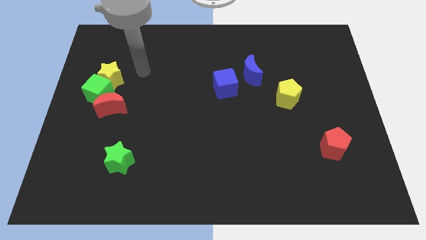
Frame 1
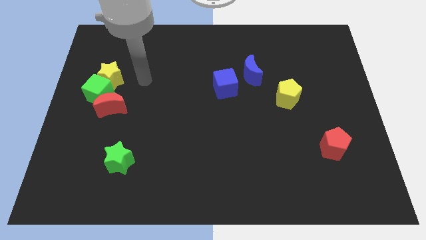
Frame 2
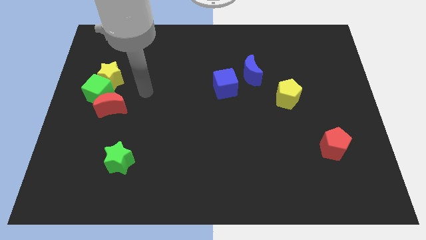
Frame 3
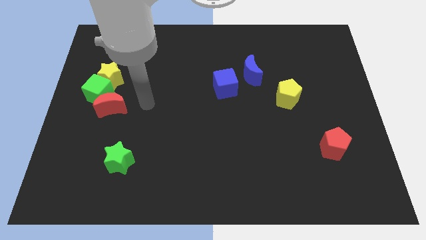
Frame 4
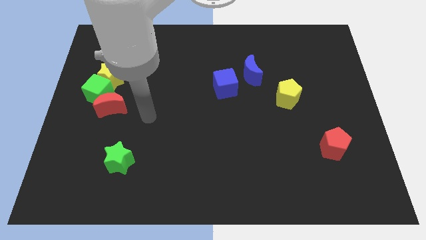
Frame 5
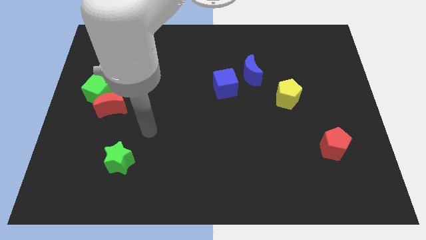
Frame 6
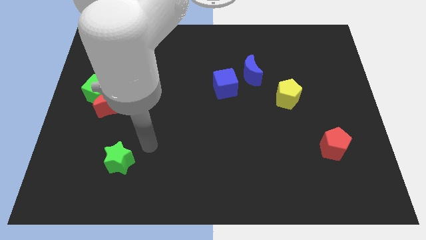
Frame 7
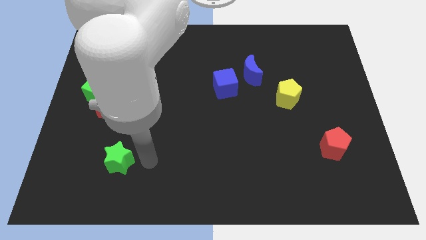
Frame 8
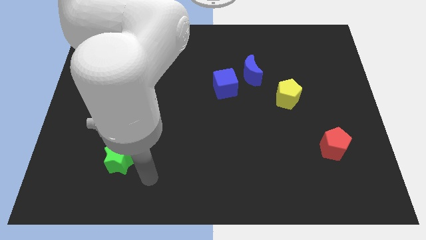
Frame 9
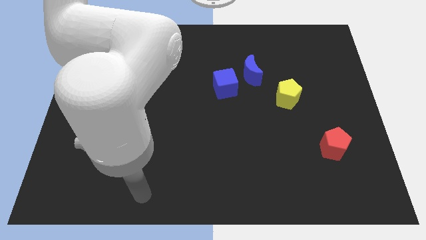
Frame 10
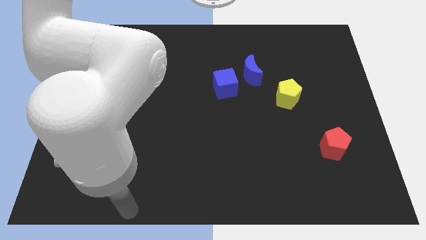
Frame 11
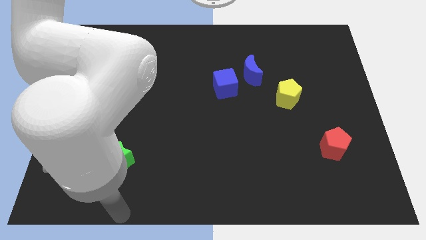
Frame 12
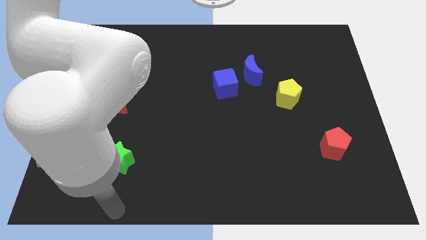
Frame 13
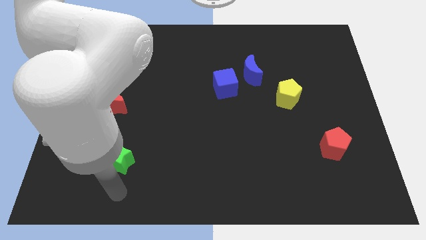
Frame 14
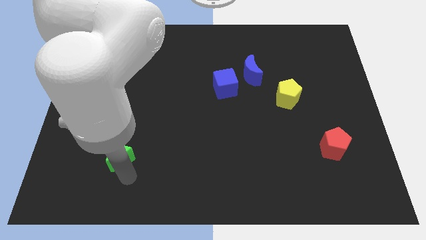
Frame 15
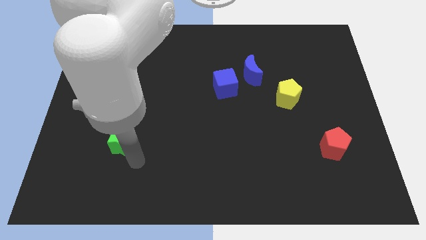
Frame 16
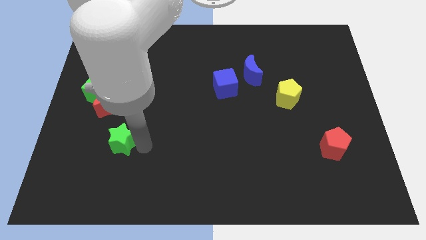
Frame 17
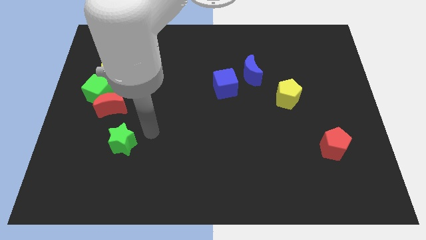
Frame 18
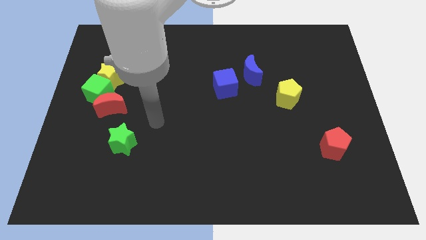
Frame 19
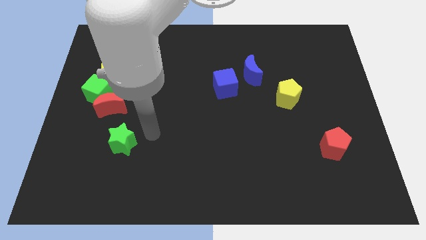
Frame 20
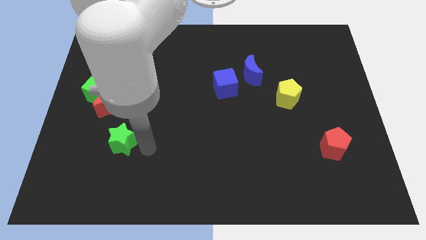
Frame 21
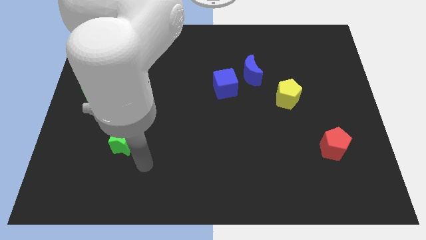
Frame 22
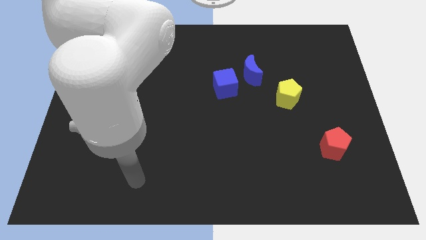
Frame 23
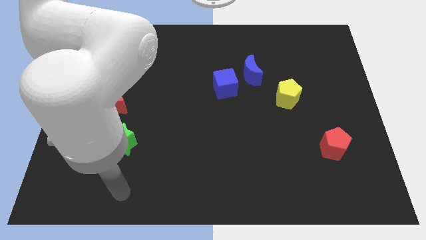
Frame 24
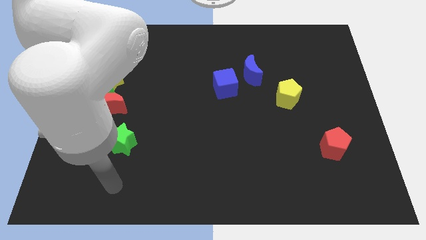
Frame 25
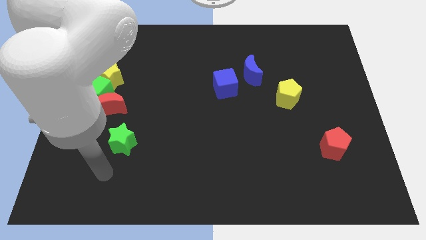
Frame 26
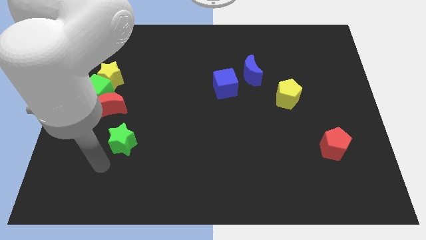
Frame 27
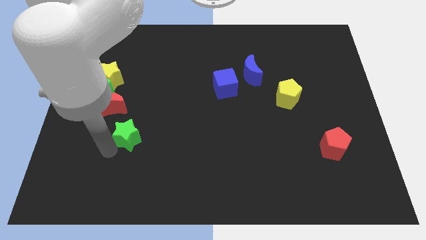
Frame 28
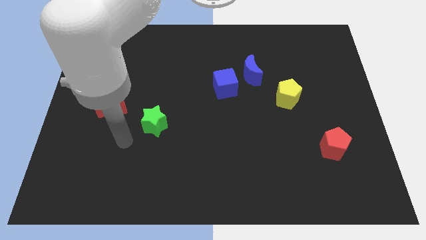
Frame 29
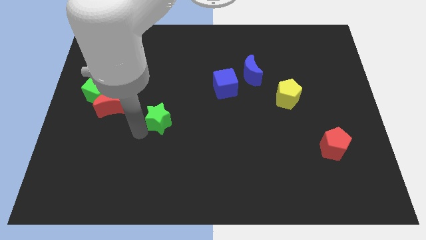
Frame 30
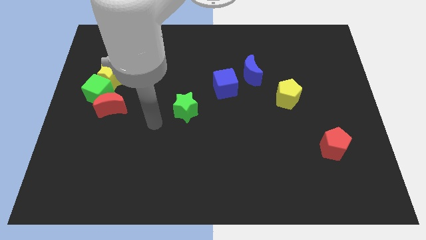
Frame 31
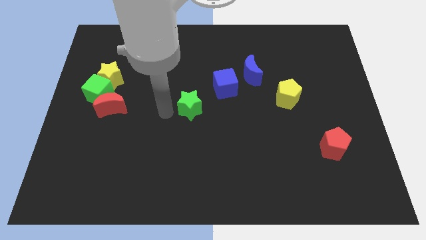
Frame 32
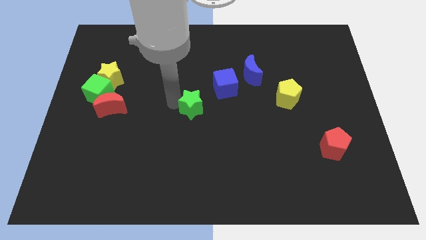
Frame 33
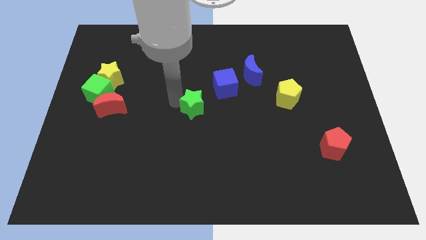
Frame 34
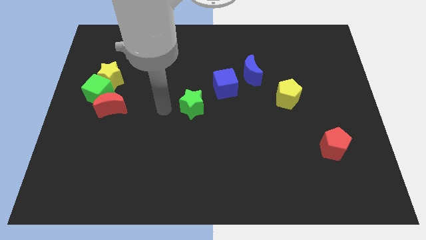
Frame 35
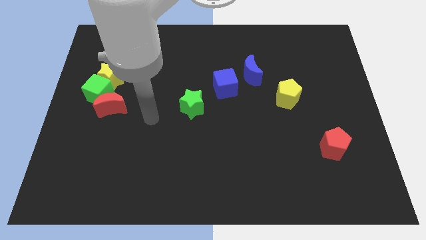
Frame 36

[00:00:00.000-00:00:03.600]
move the green star to the center of the board

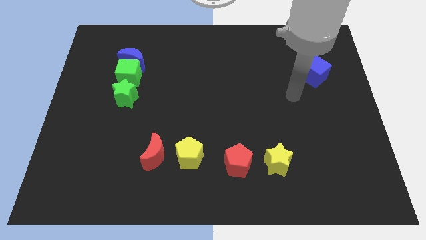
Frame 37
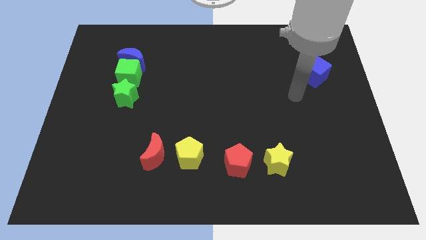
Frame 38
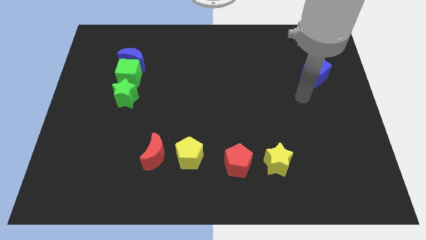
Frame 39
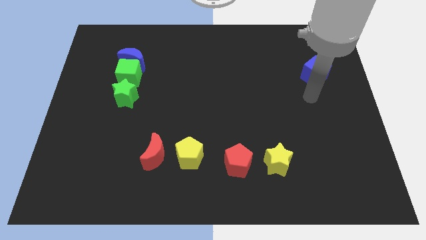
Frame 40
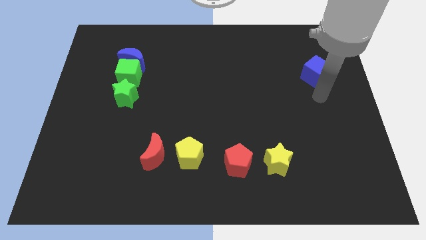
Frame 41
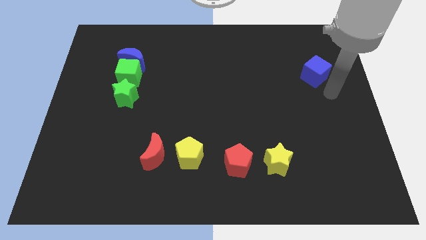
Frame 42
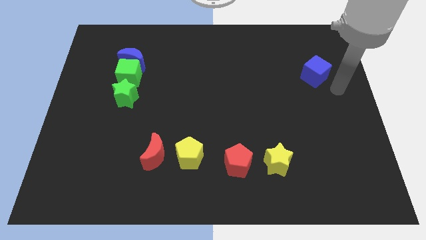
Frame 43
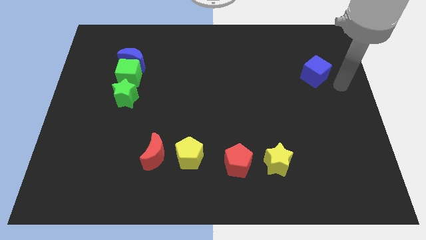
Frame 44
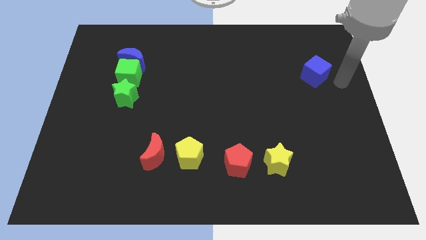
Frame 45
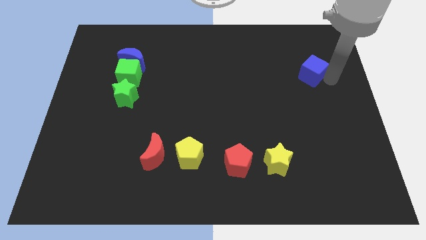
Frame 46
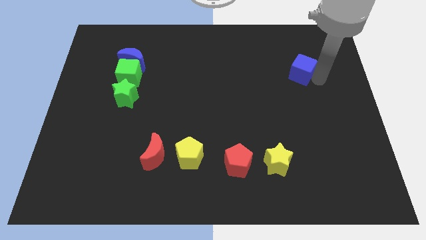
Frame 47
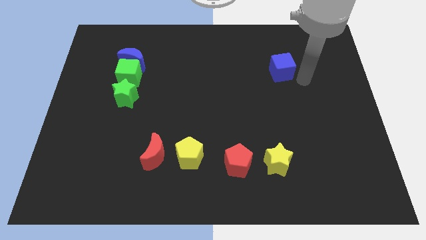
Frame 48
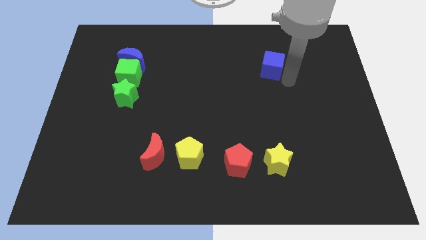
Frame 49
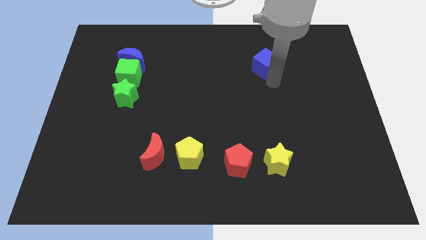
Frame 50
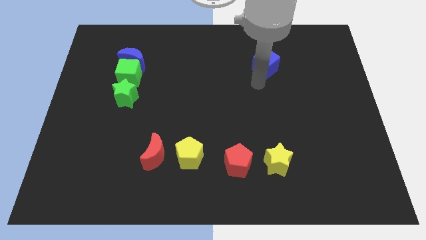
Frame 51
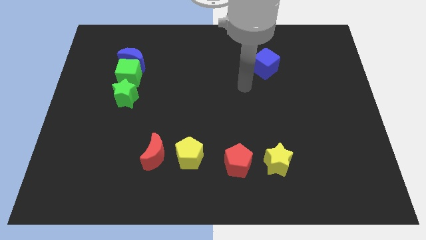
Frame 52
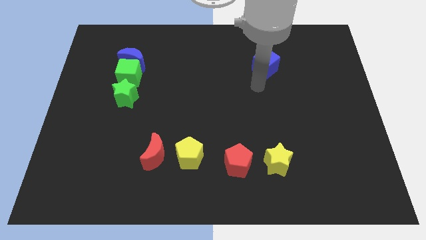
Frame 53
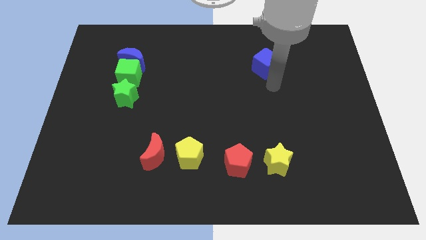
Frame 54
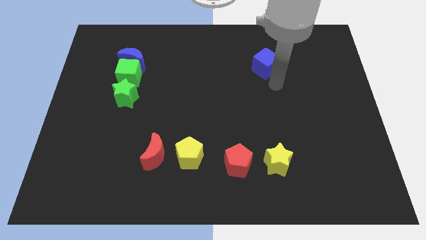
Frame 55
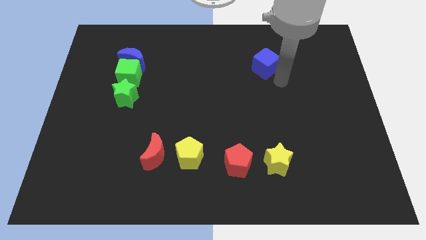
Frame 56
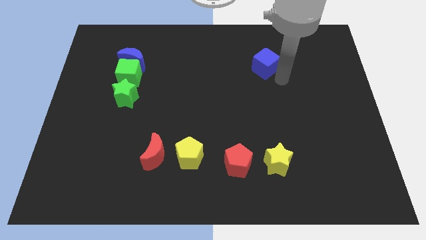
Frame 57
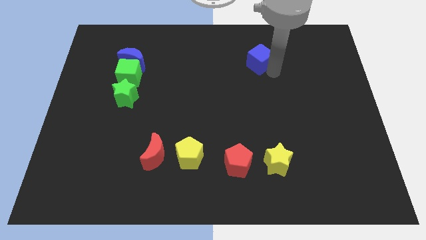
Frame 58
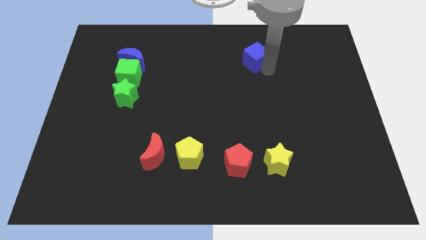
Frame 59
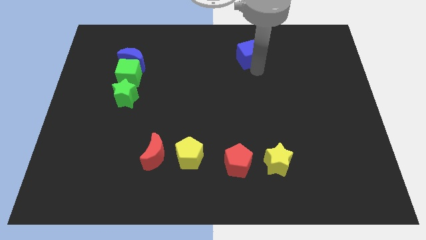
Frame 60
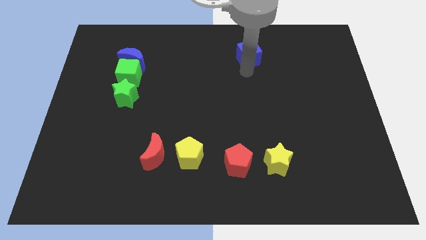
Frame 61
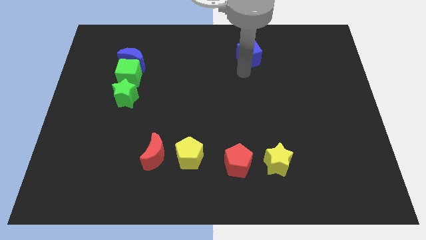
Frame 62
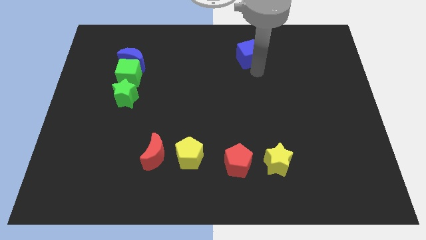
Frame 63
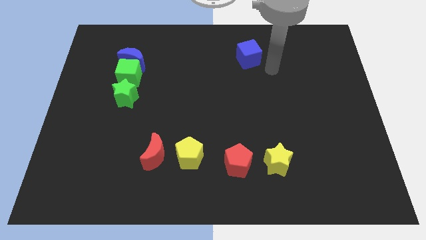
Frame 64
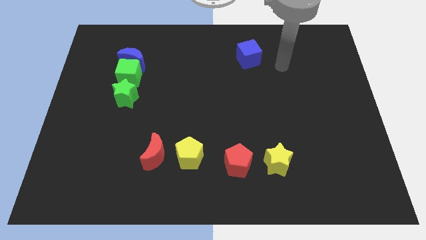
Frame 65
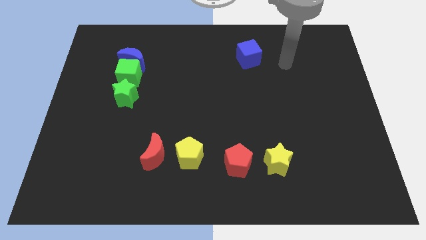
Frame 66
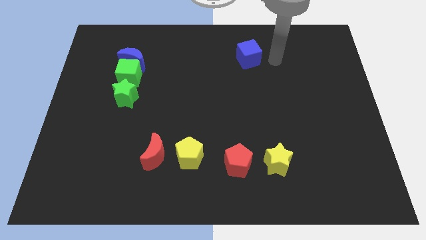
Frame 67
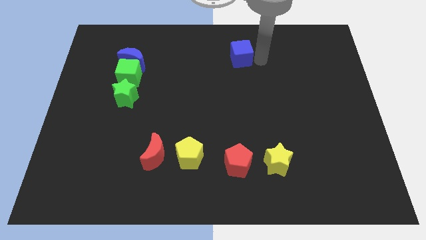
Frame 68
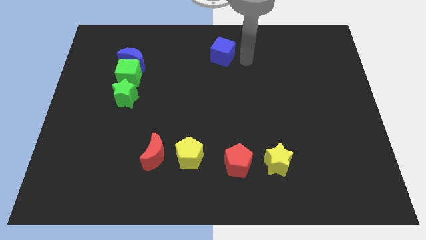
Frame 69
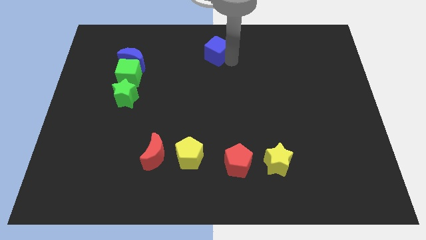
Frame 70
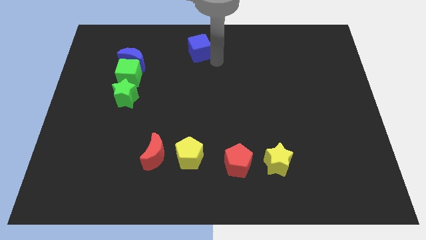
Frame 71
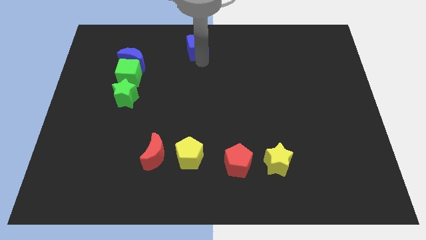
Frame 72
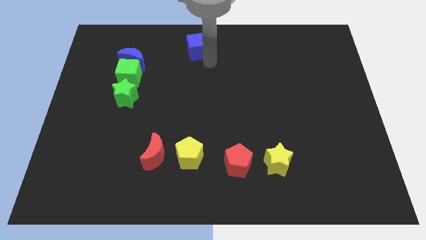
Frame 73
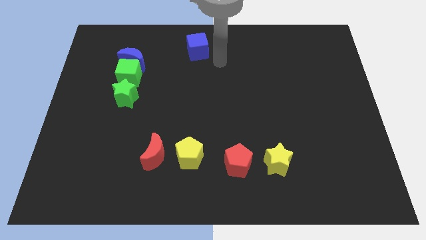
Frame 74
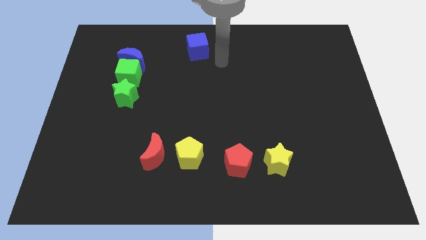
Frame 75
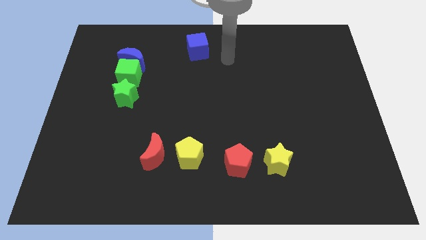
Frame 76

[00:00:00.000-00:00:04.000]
push the blue cube towards the top left

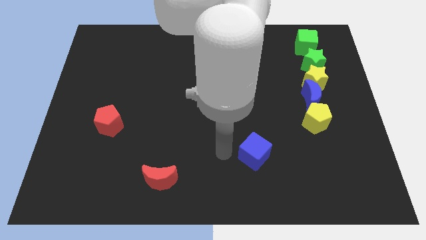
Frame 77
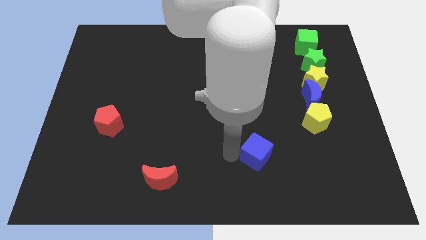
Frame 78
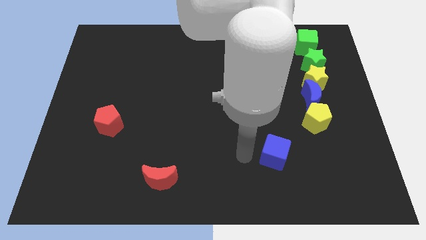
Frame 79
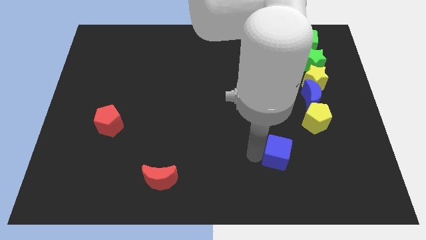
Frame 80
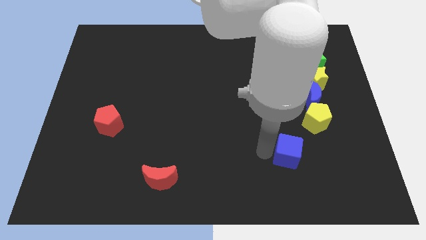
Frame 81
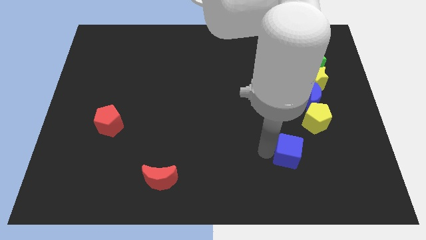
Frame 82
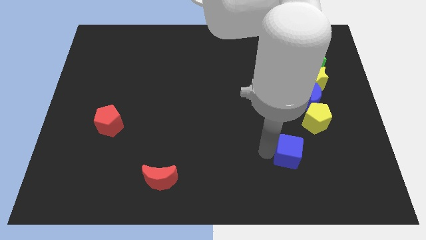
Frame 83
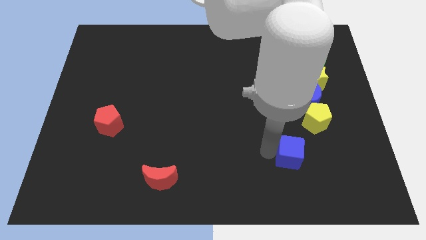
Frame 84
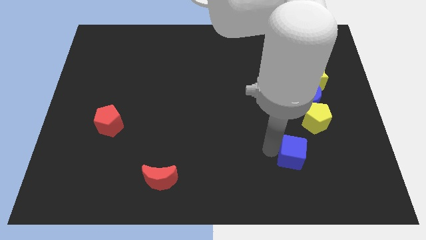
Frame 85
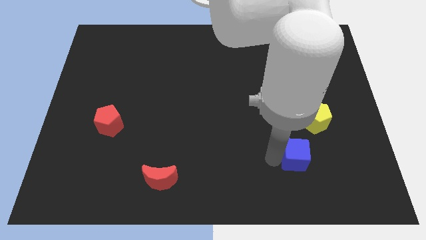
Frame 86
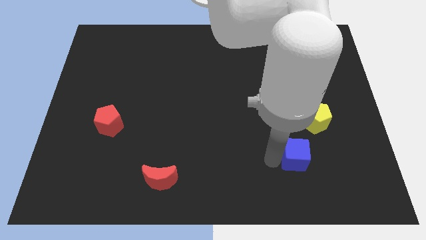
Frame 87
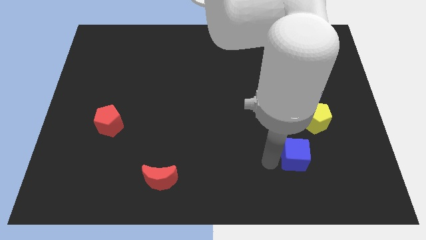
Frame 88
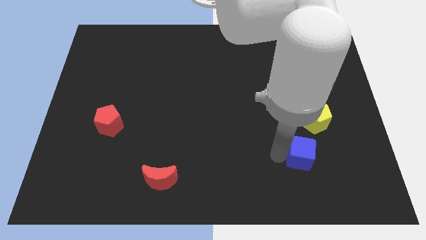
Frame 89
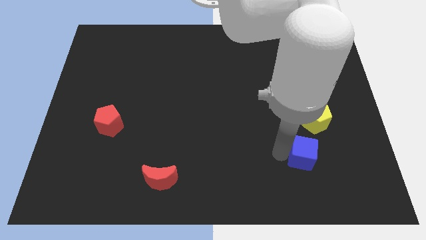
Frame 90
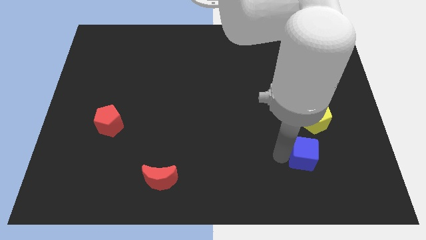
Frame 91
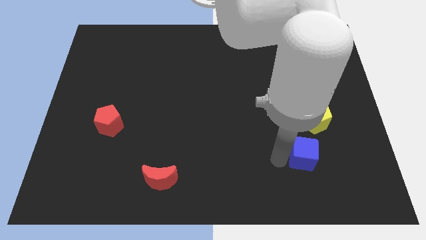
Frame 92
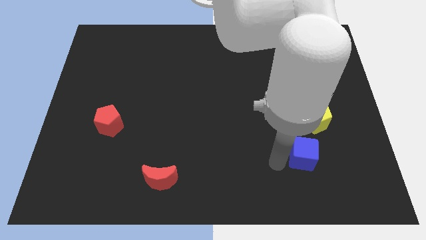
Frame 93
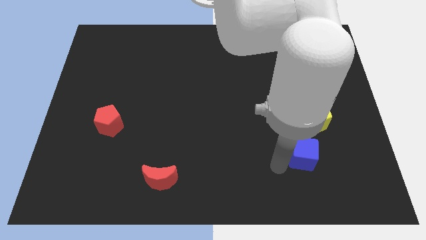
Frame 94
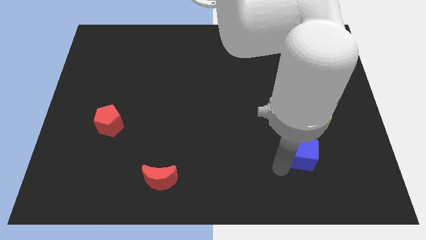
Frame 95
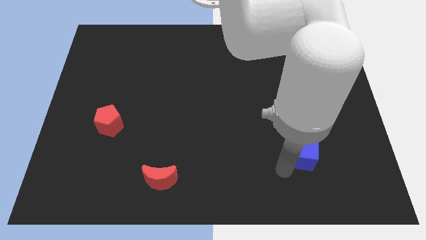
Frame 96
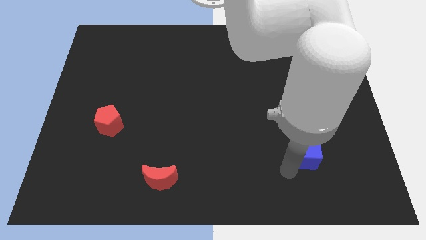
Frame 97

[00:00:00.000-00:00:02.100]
move the blue cube slightly to the bottom side of the yellow pentagon
